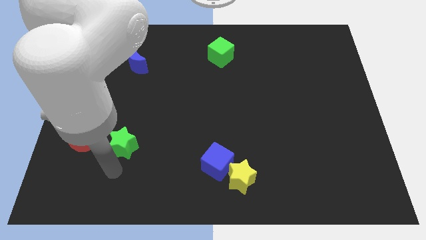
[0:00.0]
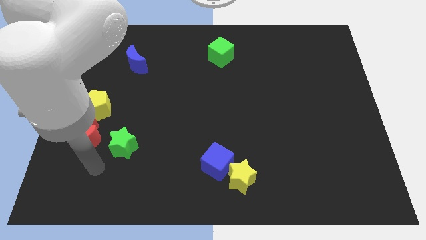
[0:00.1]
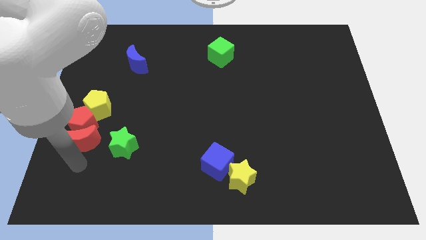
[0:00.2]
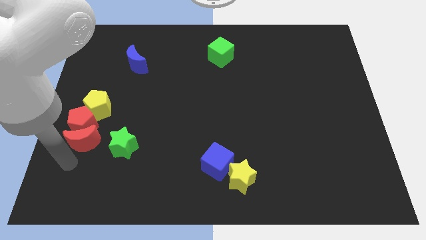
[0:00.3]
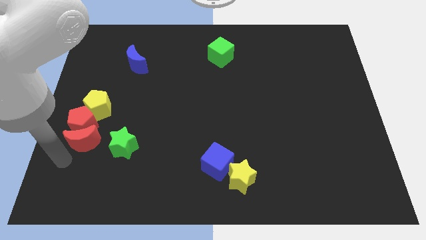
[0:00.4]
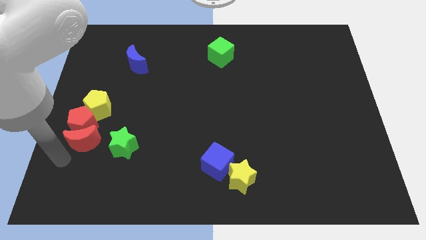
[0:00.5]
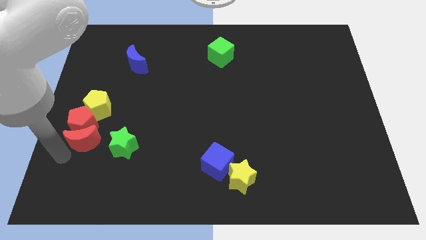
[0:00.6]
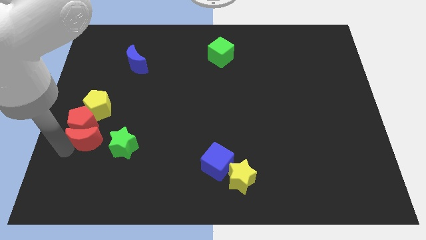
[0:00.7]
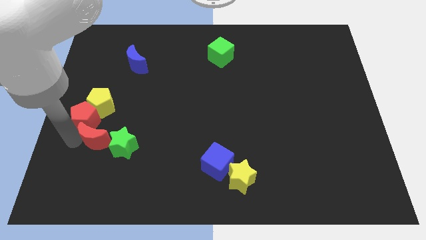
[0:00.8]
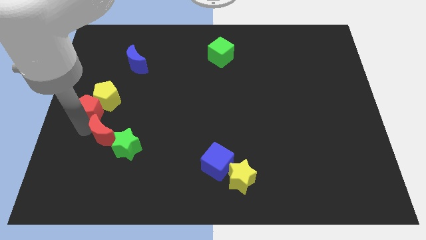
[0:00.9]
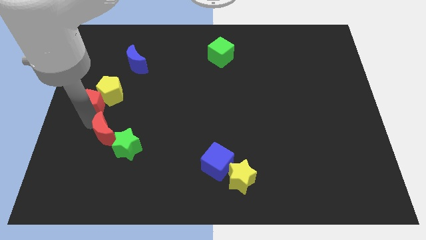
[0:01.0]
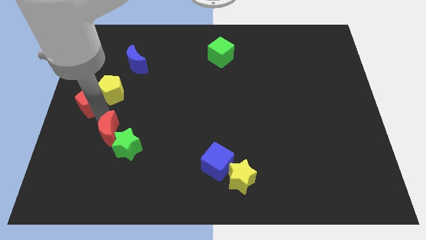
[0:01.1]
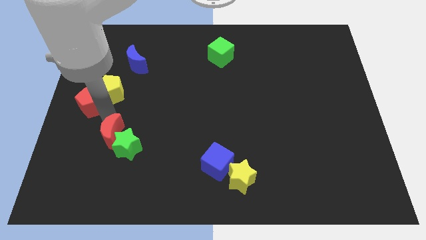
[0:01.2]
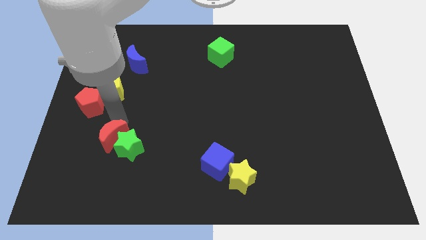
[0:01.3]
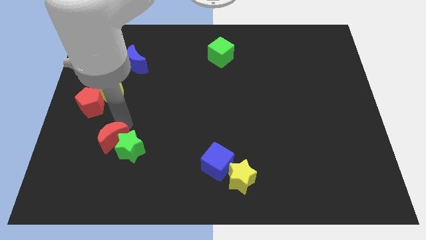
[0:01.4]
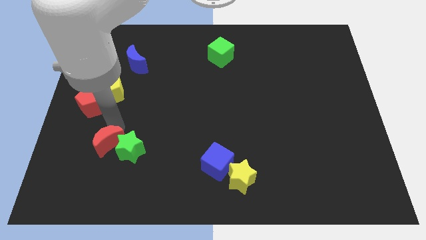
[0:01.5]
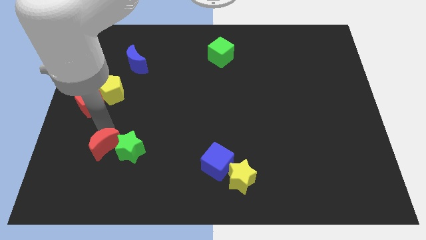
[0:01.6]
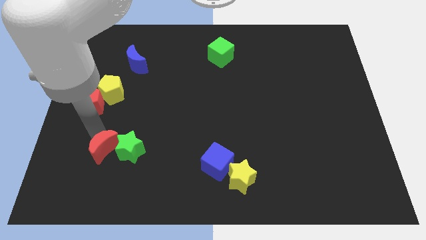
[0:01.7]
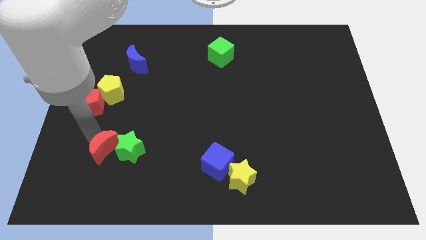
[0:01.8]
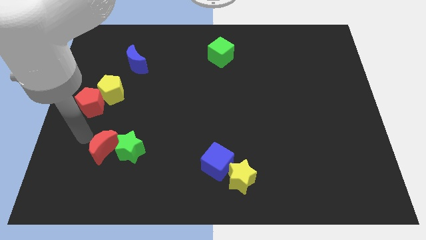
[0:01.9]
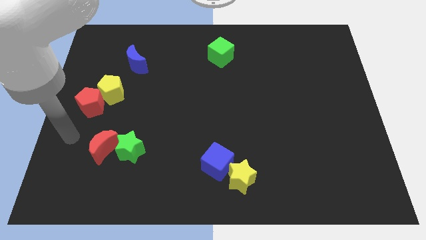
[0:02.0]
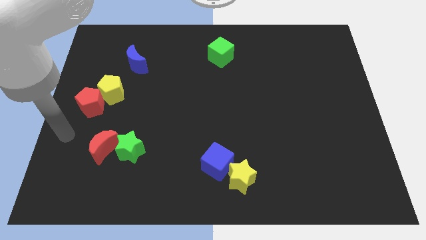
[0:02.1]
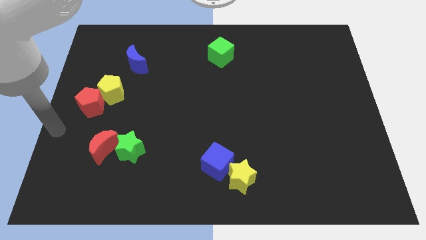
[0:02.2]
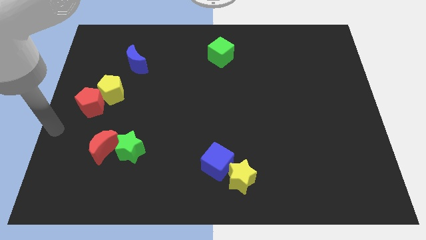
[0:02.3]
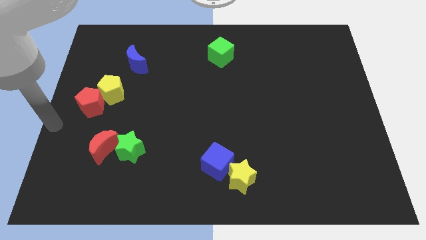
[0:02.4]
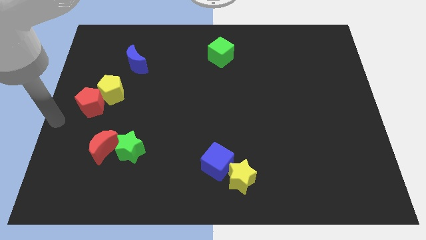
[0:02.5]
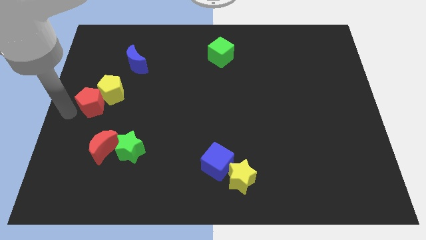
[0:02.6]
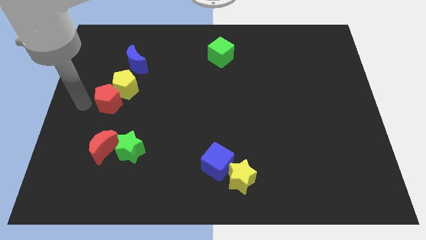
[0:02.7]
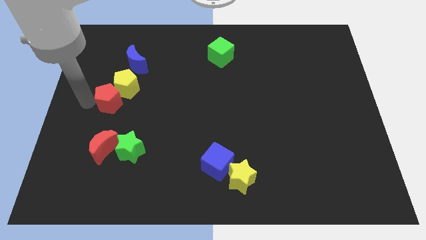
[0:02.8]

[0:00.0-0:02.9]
push red crescent into green star

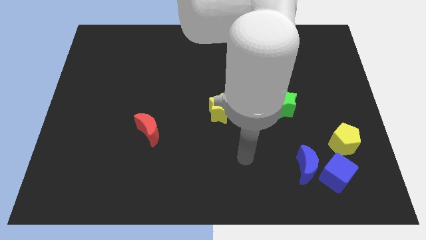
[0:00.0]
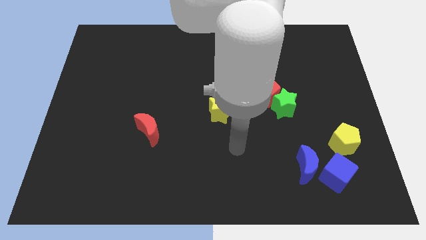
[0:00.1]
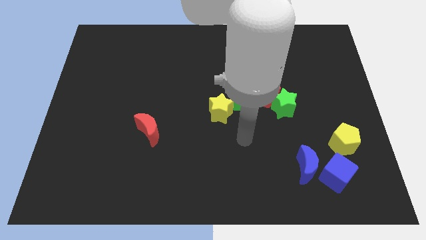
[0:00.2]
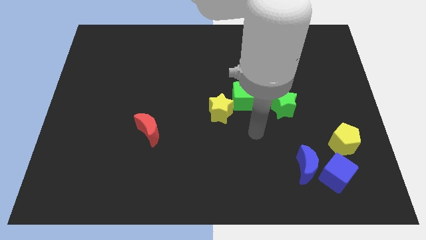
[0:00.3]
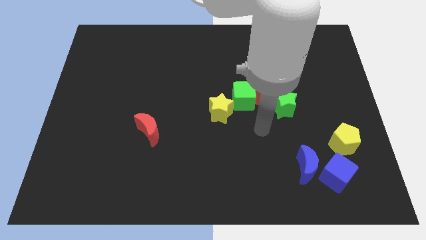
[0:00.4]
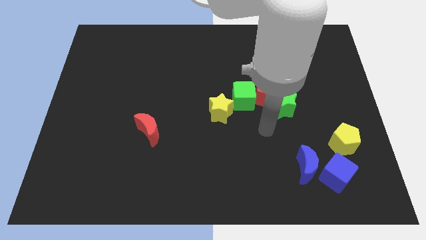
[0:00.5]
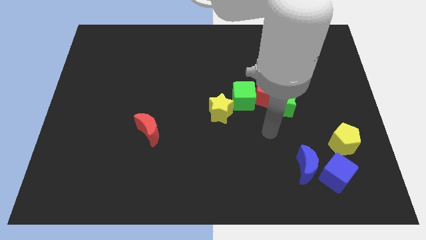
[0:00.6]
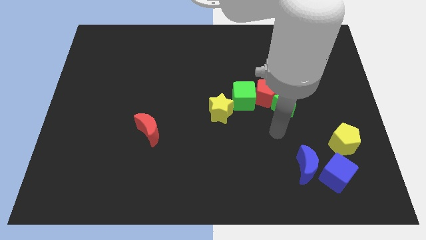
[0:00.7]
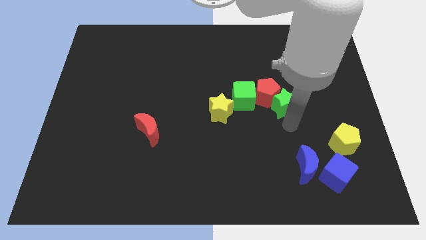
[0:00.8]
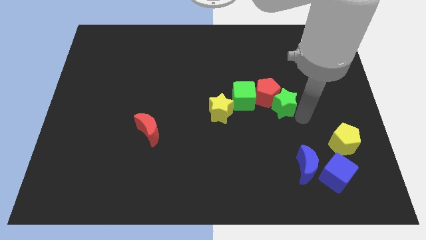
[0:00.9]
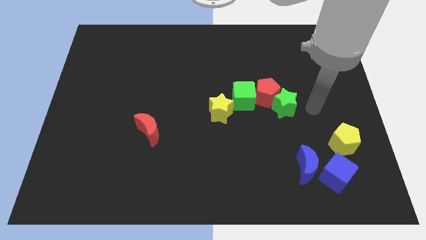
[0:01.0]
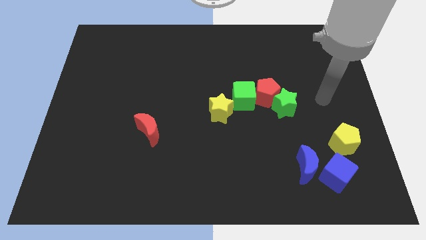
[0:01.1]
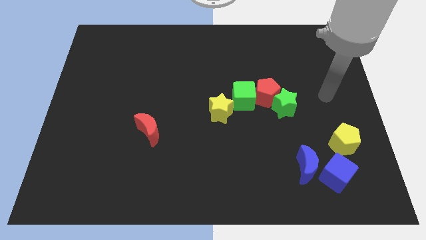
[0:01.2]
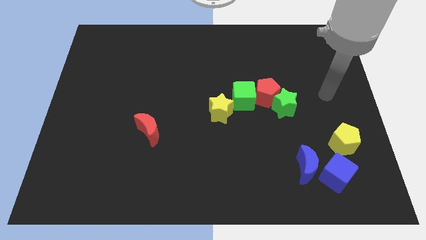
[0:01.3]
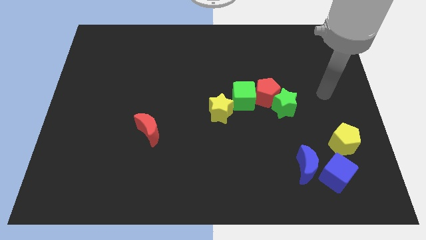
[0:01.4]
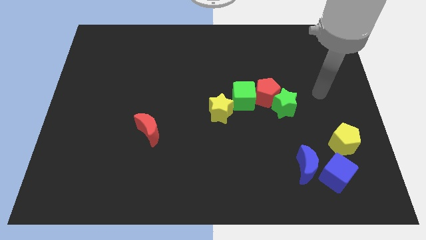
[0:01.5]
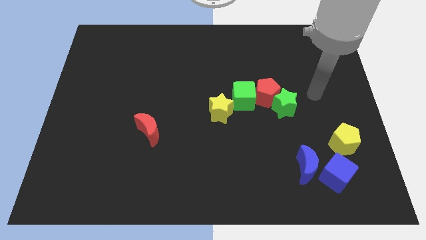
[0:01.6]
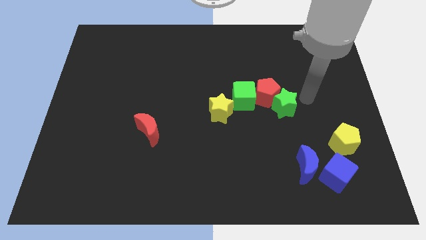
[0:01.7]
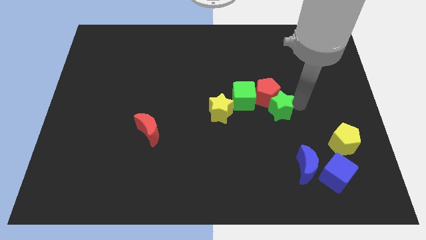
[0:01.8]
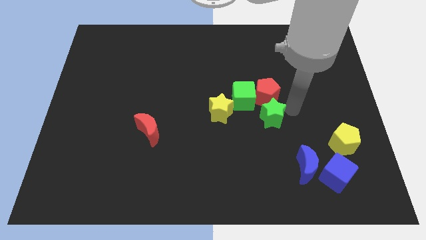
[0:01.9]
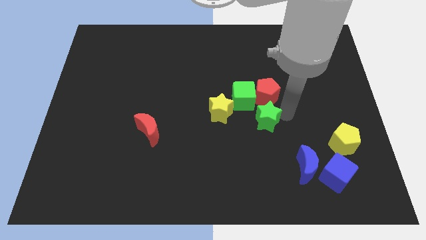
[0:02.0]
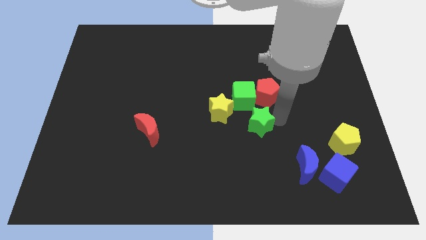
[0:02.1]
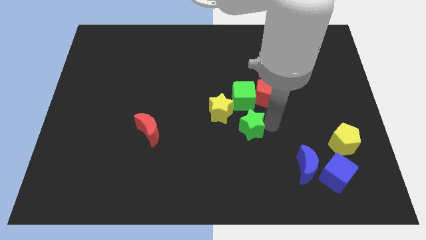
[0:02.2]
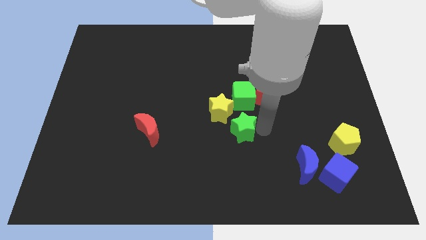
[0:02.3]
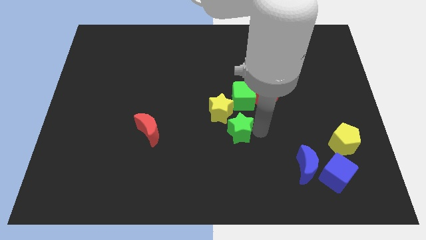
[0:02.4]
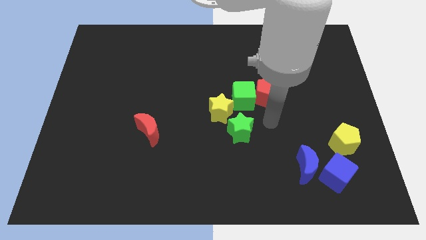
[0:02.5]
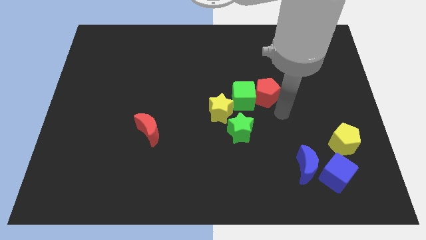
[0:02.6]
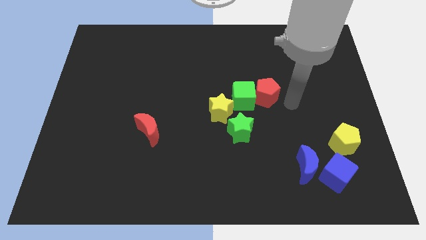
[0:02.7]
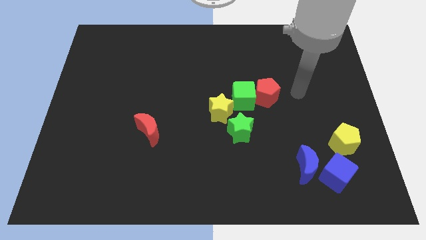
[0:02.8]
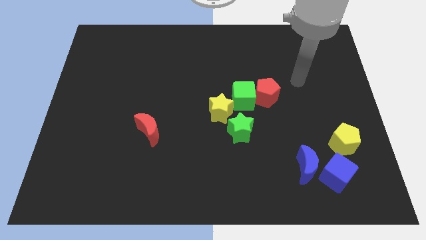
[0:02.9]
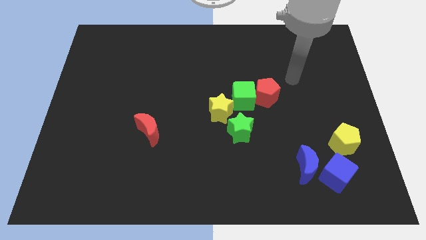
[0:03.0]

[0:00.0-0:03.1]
put the green star at the bottom right of the yellow star

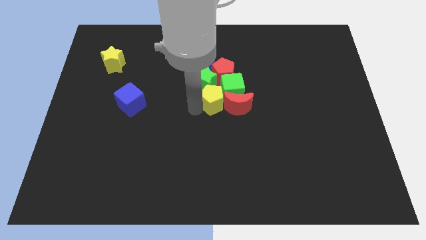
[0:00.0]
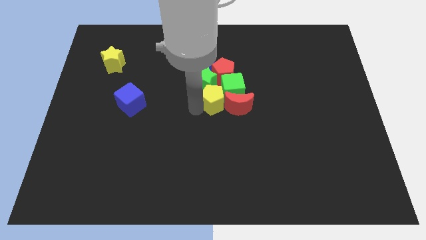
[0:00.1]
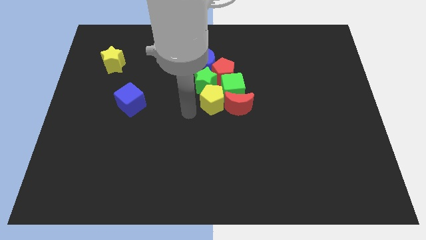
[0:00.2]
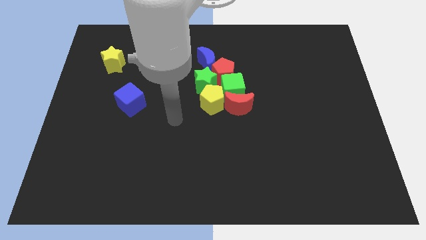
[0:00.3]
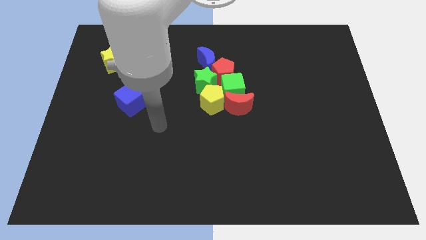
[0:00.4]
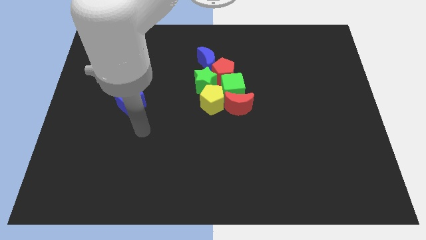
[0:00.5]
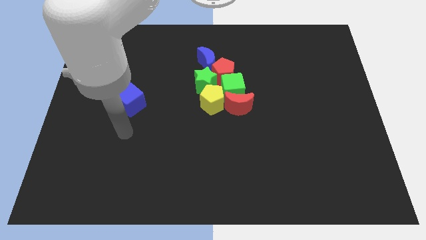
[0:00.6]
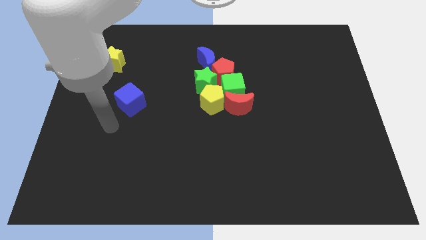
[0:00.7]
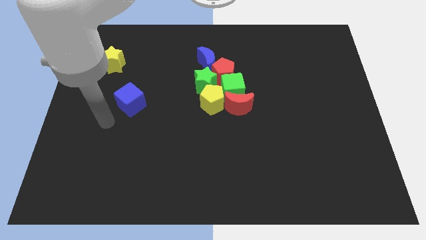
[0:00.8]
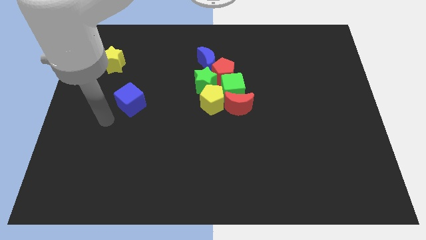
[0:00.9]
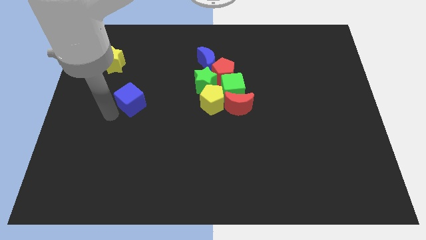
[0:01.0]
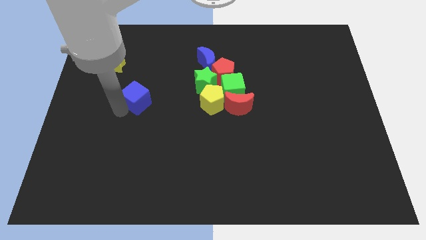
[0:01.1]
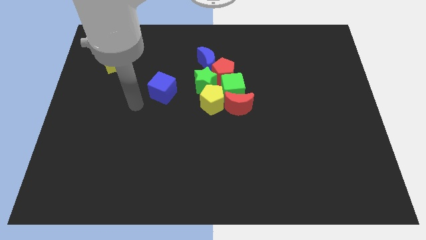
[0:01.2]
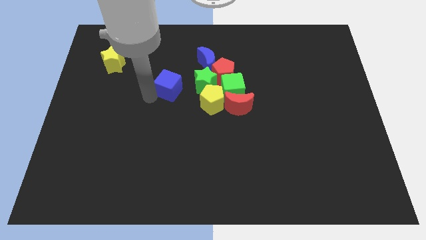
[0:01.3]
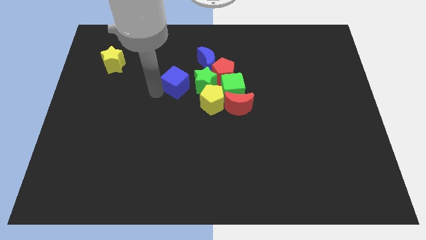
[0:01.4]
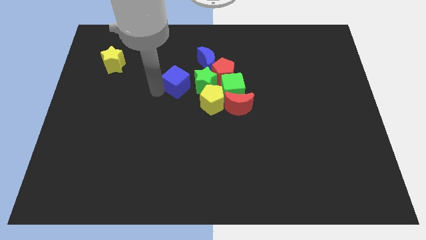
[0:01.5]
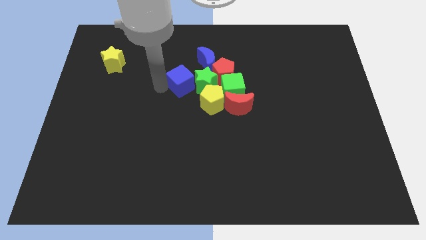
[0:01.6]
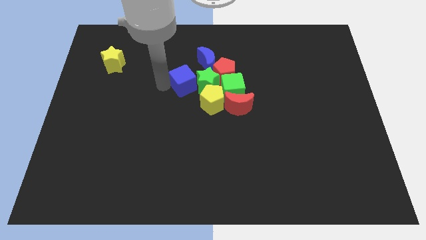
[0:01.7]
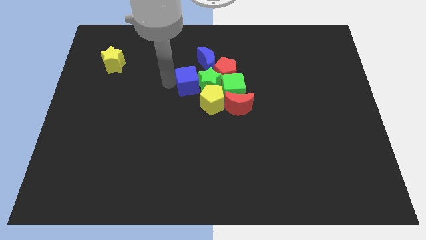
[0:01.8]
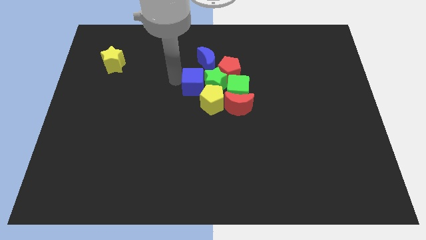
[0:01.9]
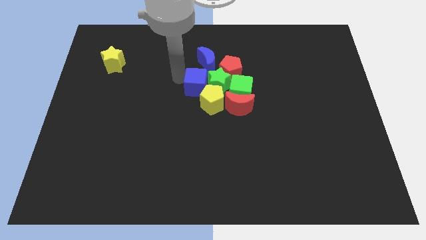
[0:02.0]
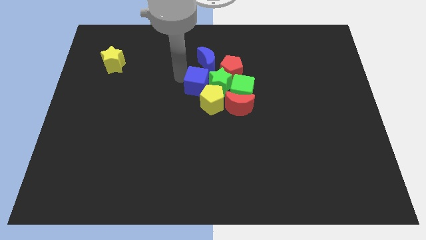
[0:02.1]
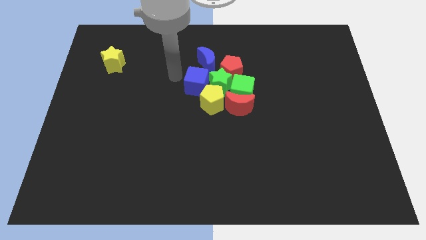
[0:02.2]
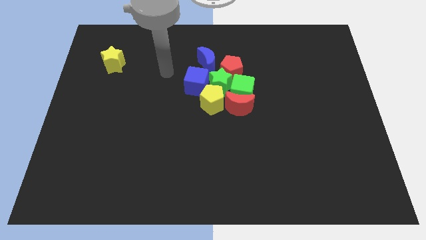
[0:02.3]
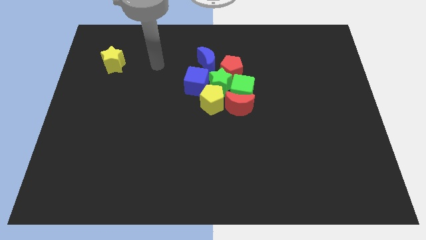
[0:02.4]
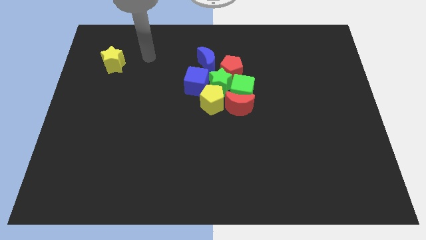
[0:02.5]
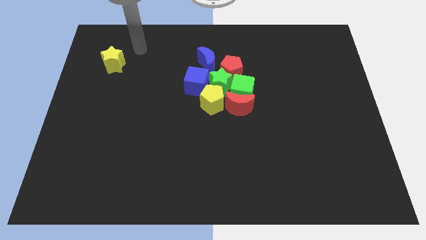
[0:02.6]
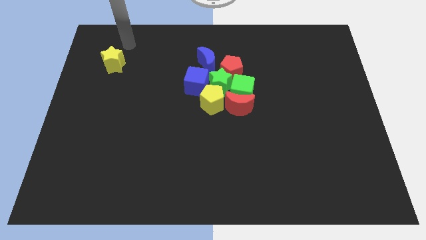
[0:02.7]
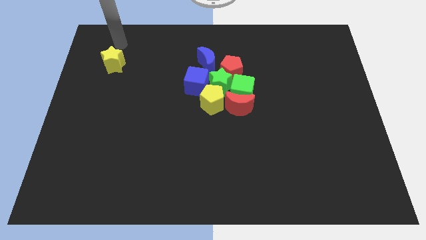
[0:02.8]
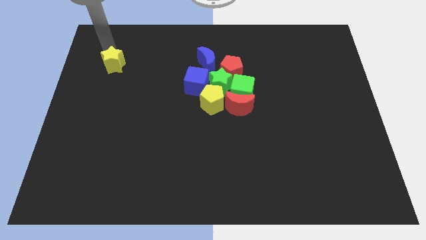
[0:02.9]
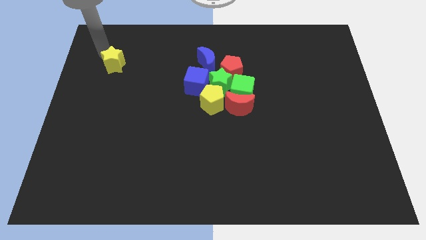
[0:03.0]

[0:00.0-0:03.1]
place the blue cube left to the green star

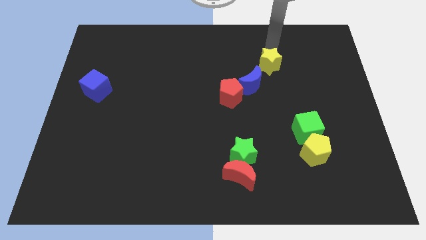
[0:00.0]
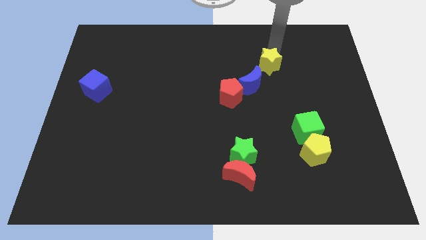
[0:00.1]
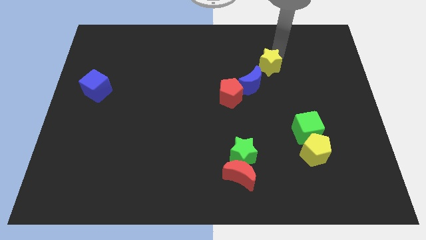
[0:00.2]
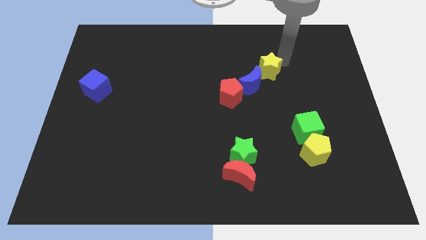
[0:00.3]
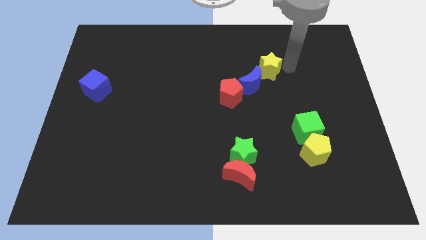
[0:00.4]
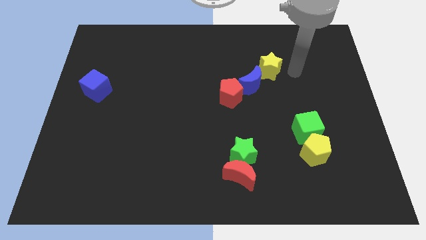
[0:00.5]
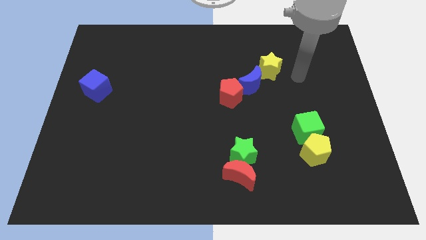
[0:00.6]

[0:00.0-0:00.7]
slide yellow star towards blue crescent
